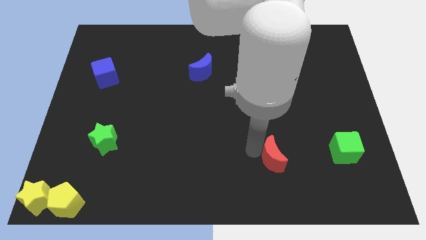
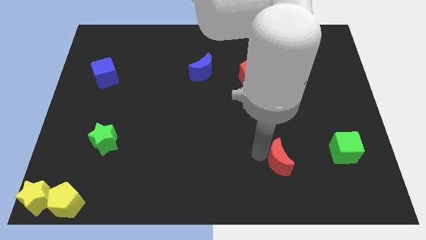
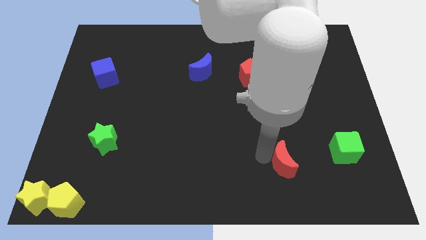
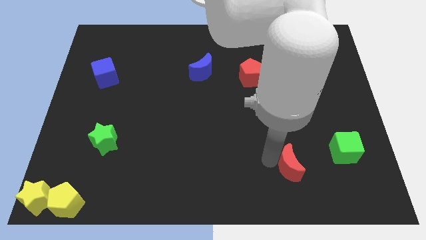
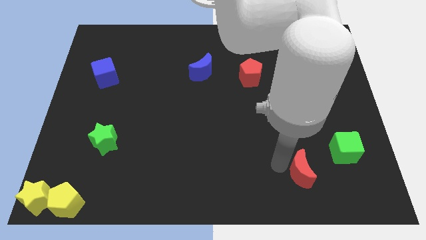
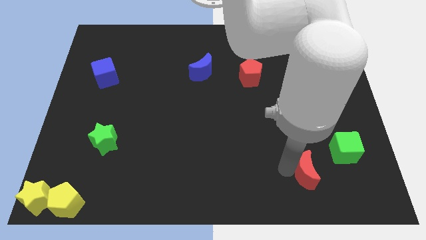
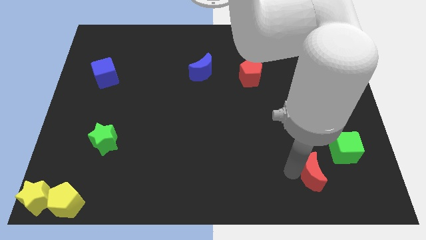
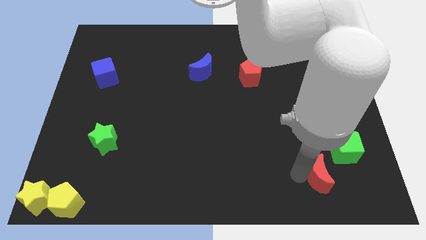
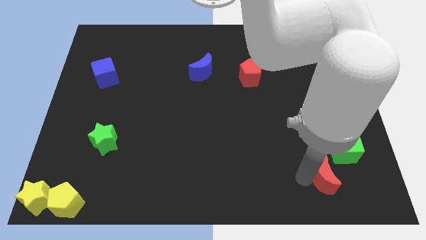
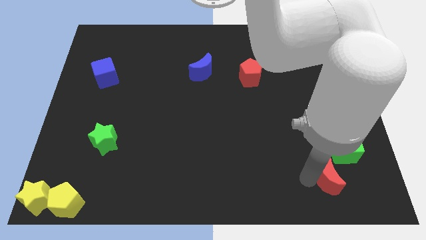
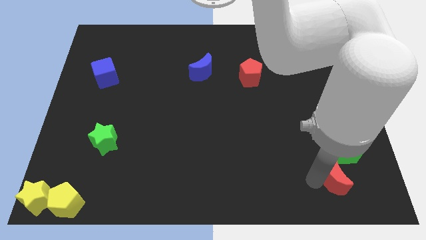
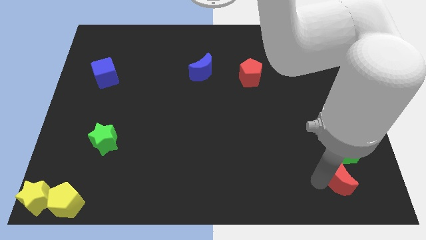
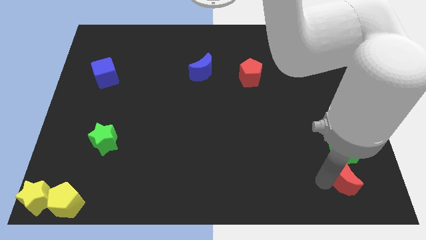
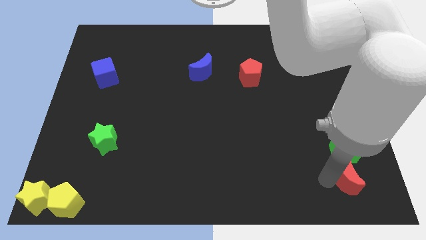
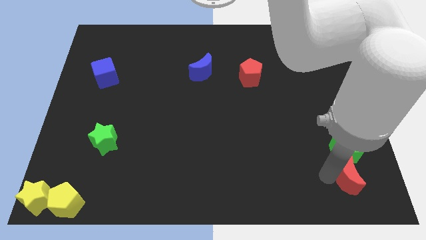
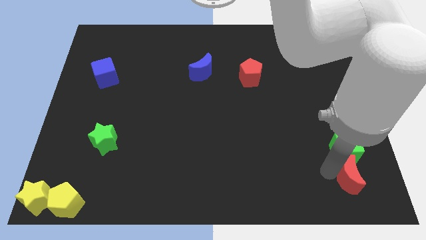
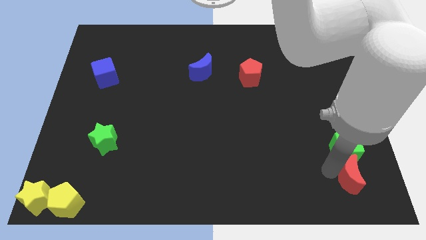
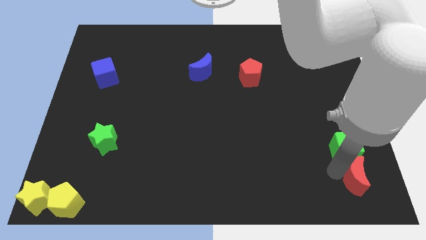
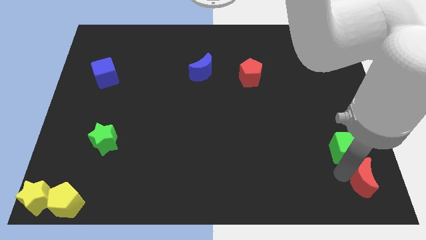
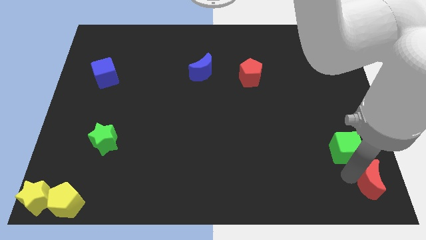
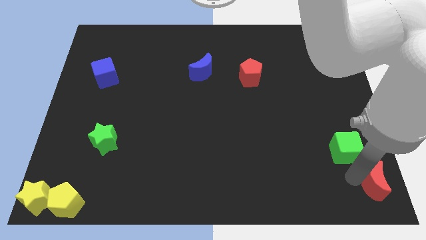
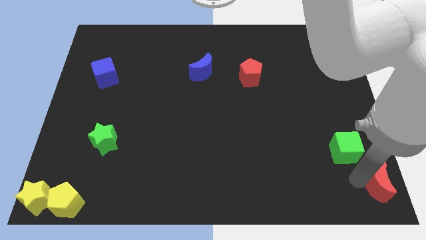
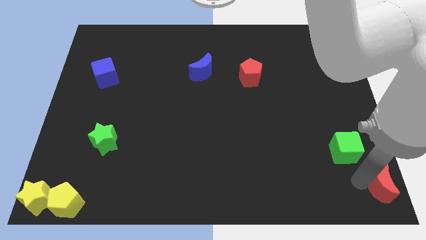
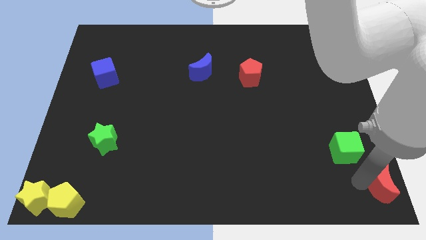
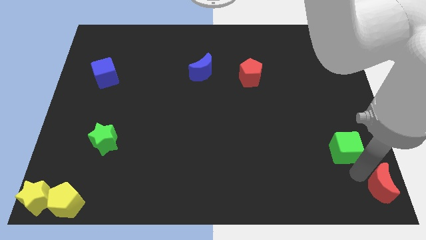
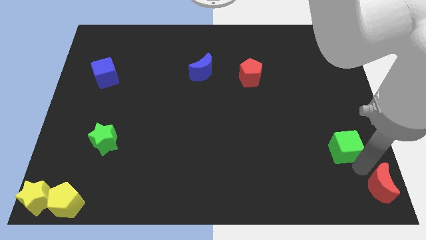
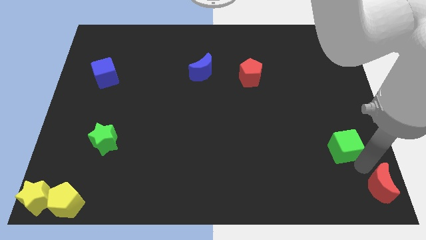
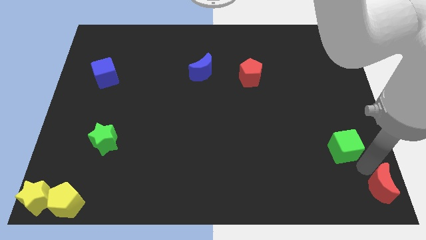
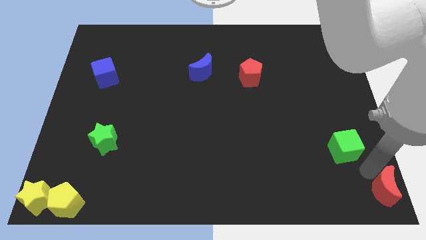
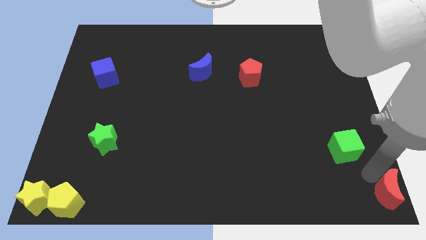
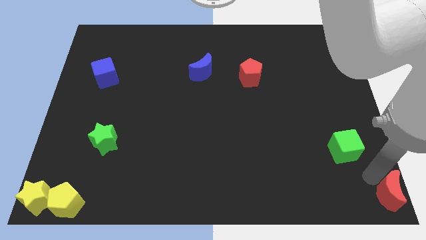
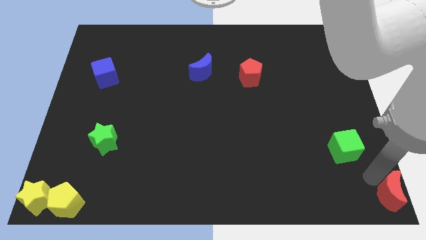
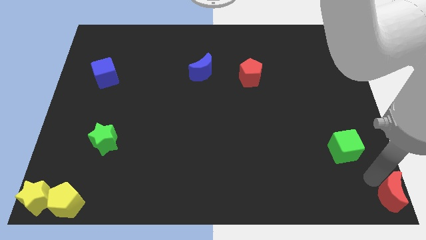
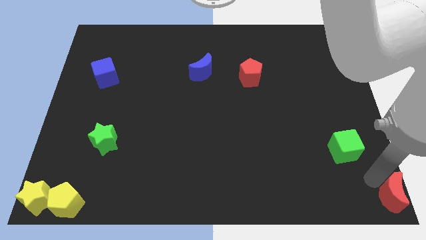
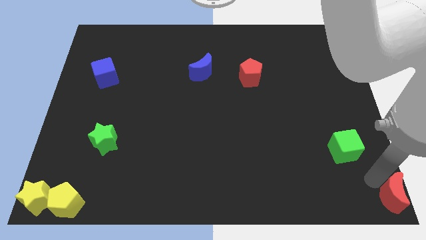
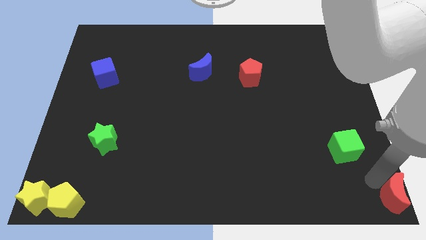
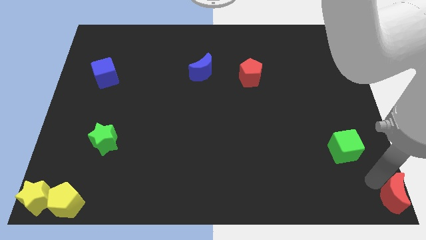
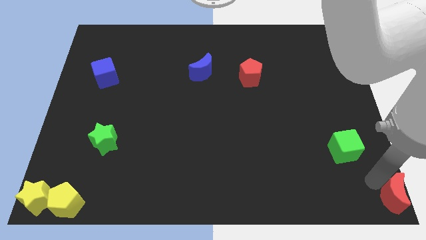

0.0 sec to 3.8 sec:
move the red moon to the bottom right corner of the board

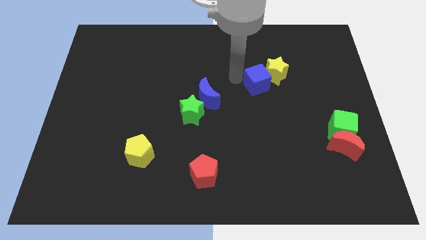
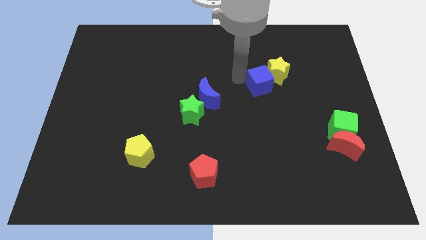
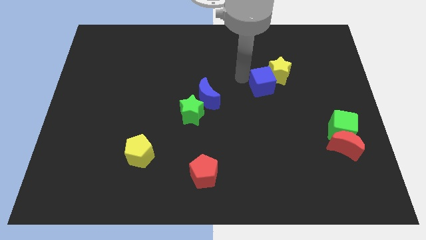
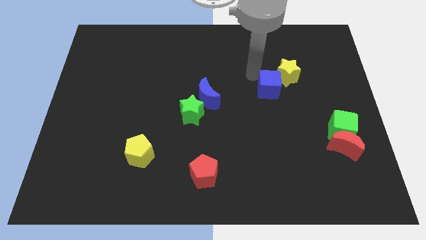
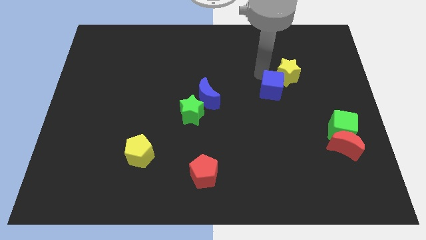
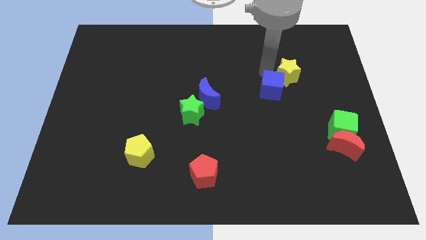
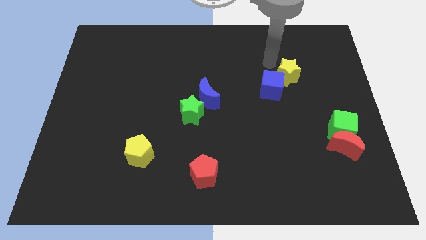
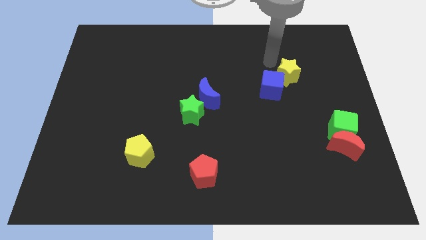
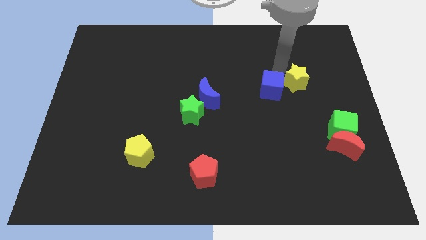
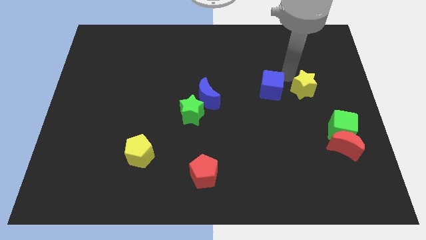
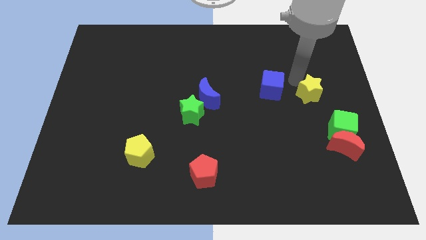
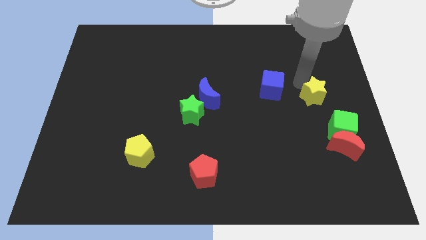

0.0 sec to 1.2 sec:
separate the blue cube and yellow star

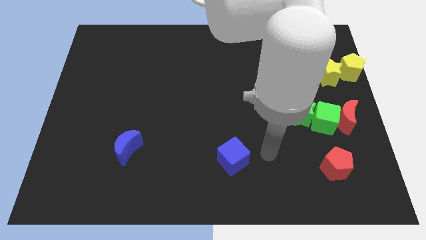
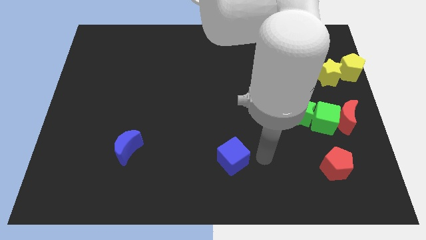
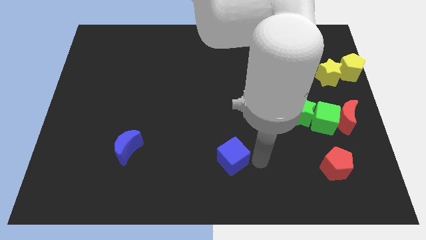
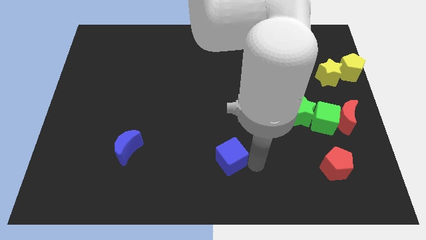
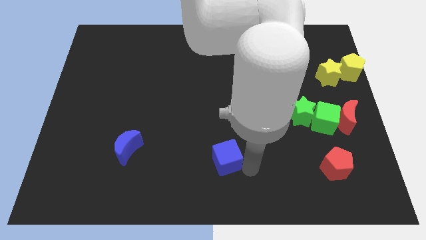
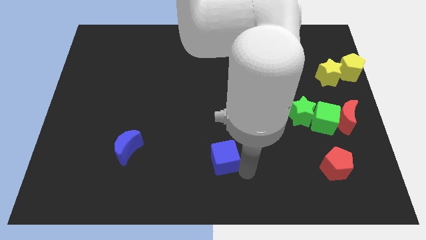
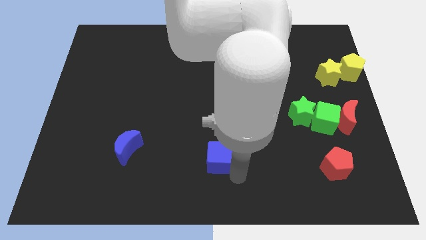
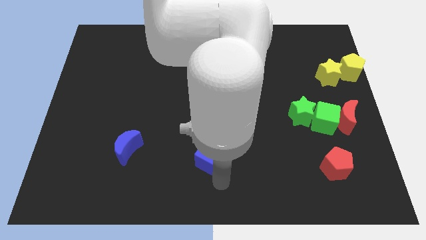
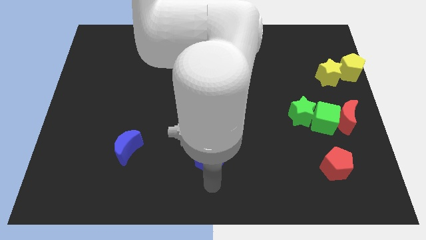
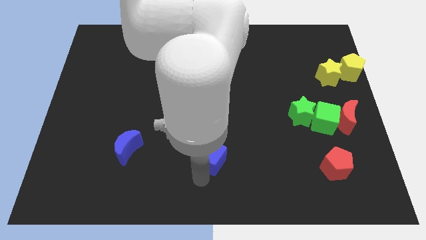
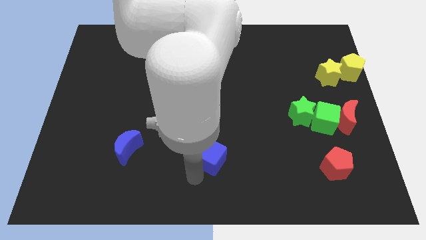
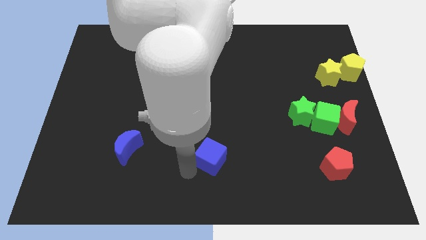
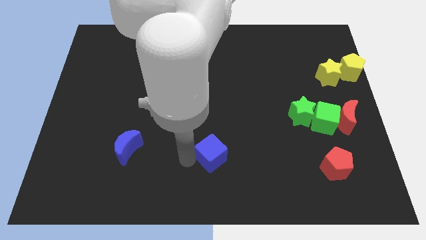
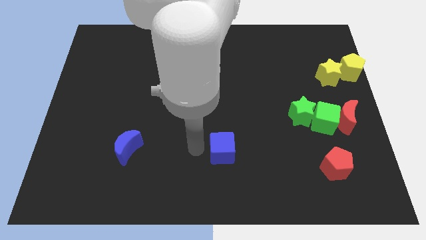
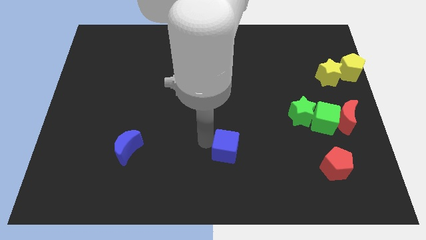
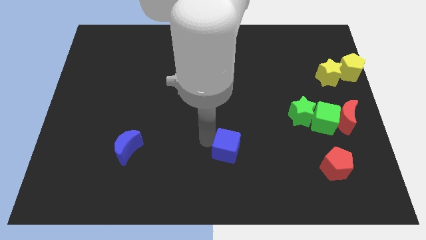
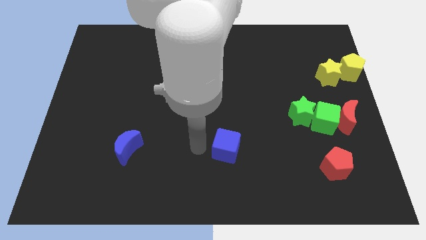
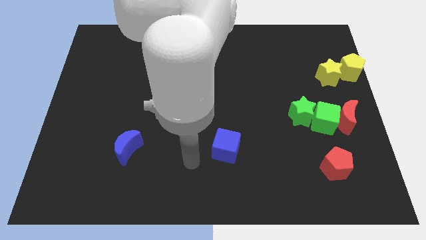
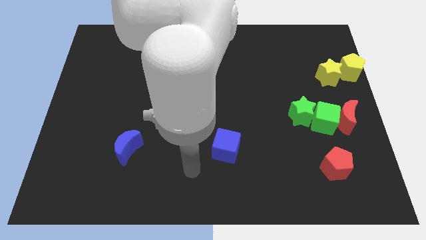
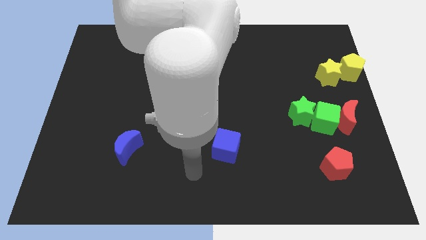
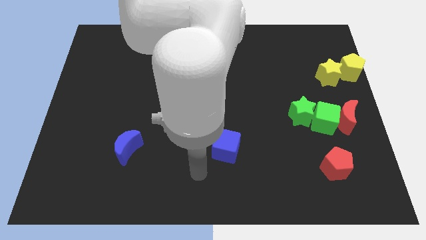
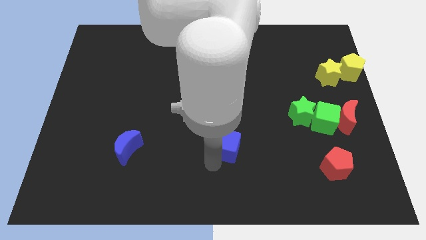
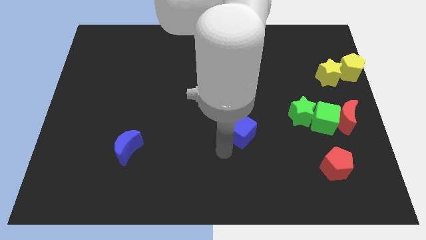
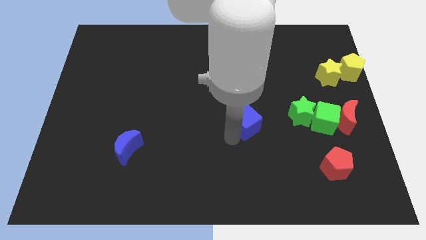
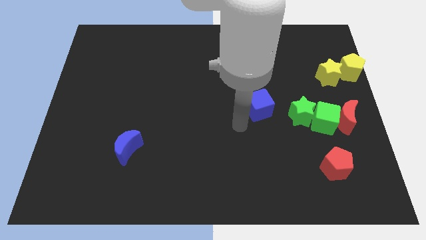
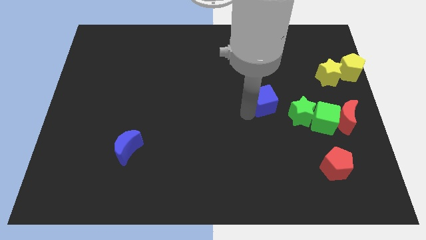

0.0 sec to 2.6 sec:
push blue cube beside green star

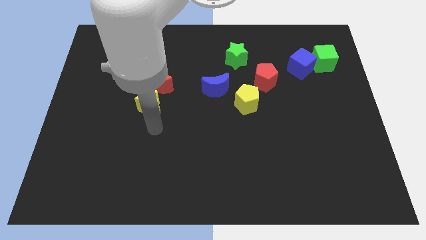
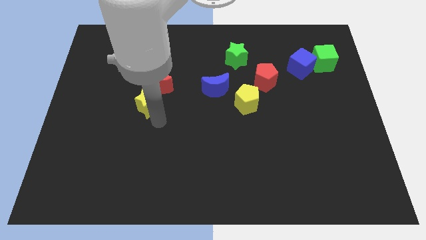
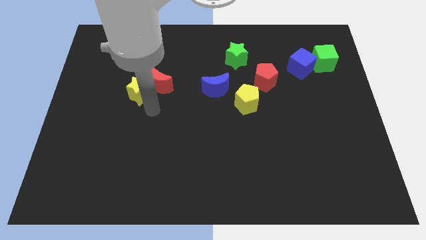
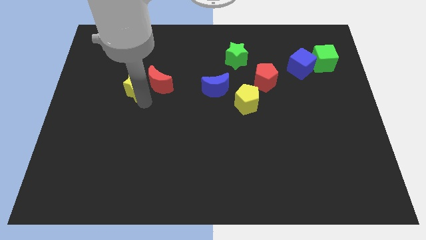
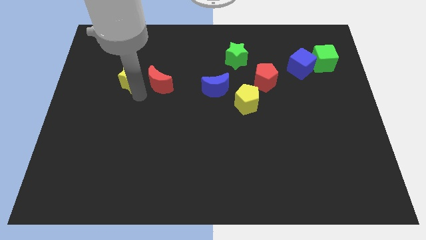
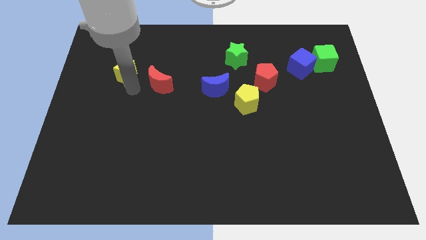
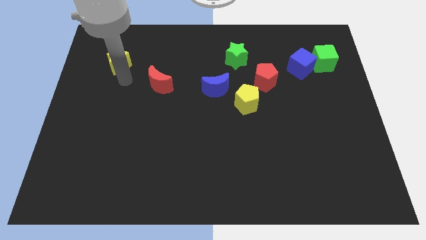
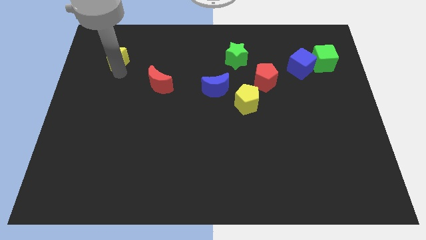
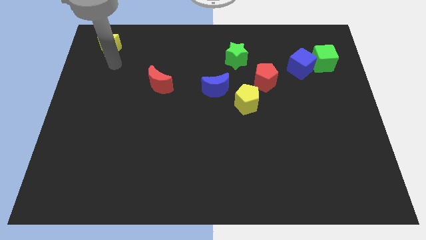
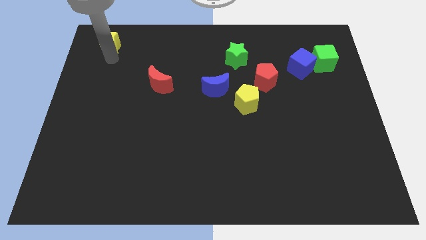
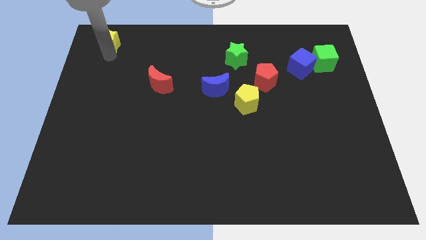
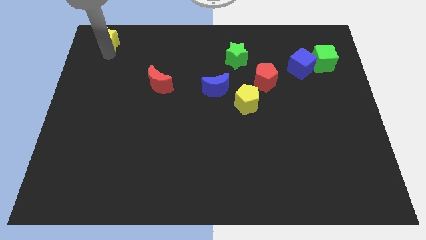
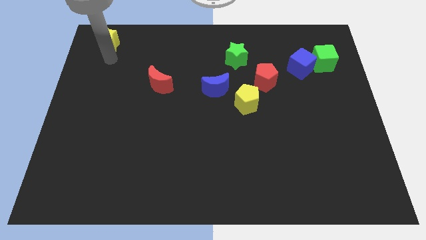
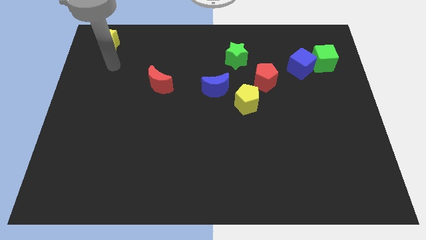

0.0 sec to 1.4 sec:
move the yellow star away from the red crescent

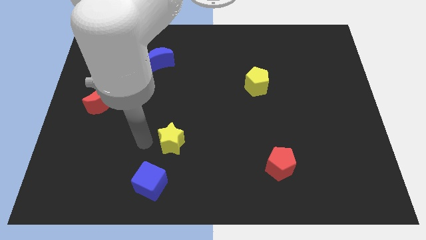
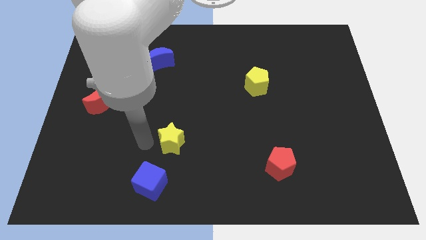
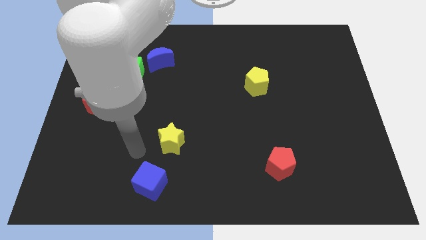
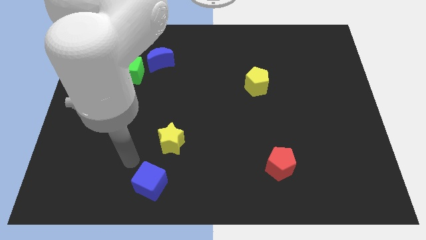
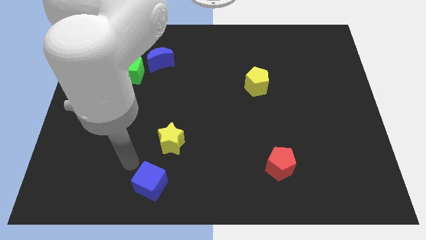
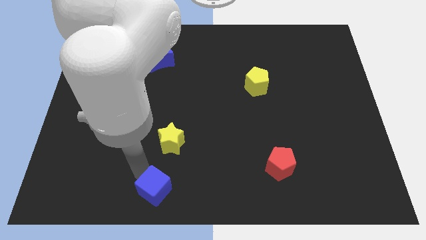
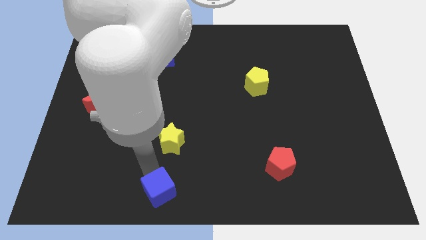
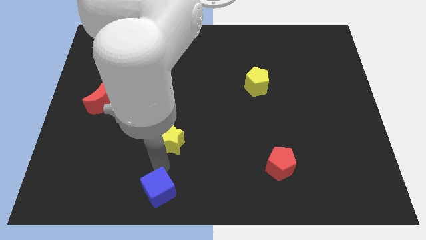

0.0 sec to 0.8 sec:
push the blue cube slightly to the bottom
